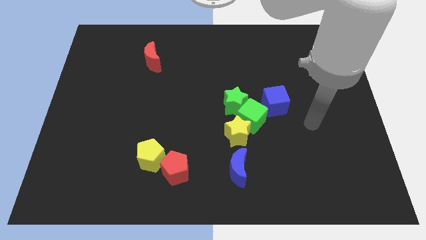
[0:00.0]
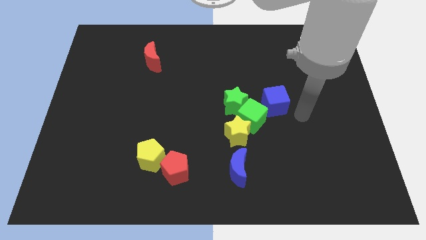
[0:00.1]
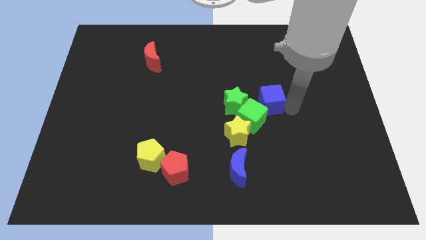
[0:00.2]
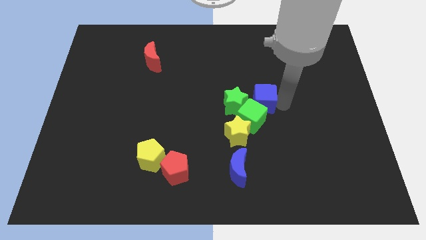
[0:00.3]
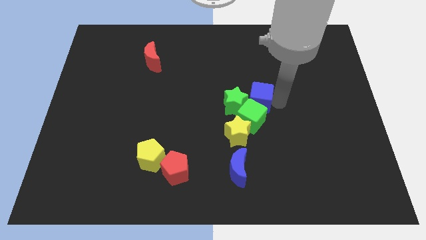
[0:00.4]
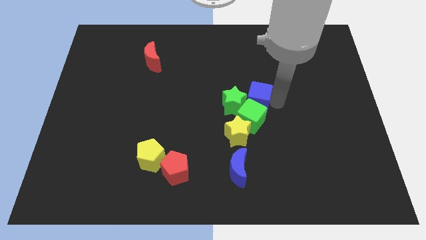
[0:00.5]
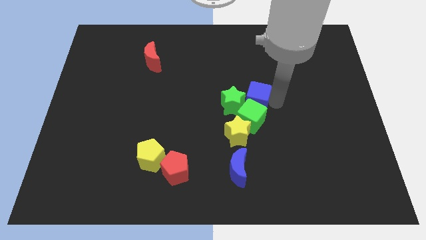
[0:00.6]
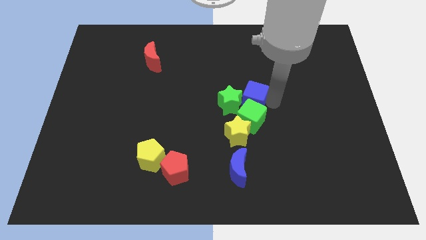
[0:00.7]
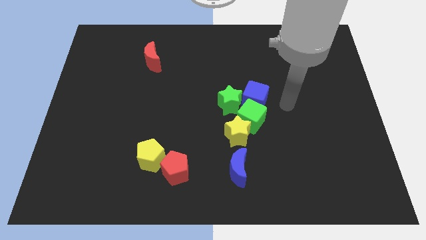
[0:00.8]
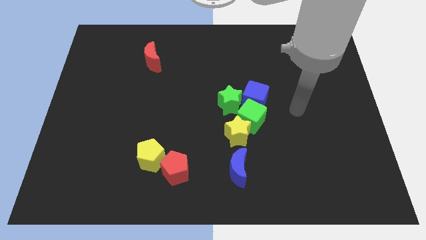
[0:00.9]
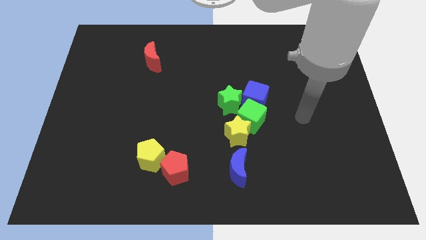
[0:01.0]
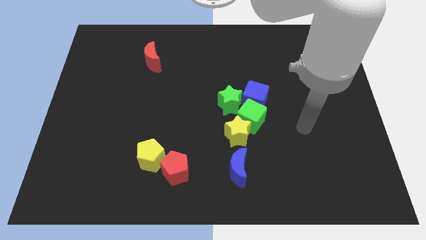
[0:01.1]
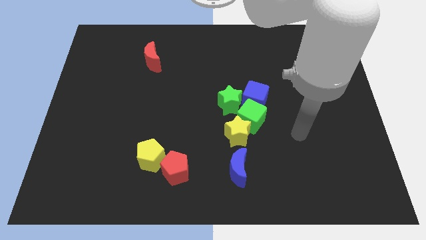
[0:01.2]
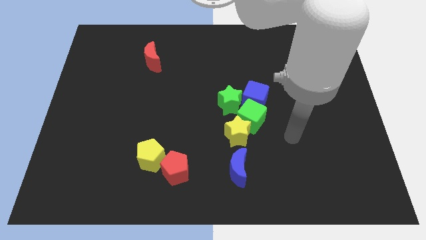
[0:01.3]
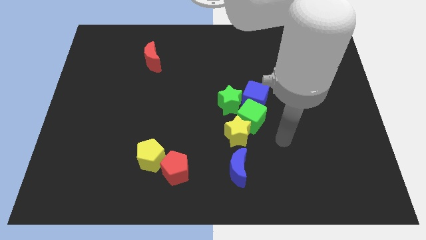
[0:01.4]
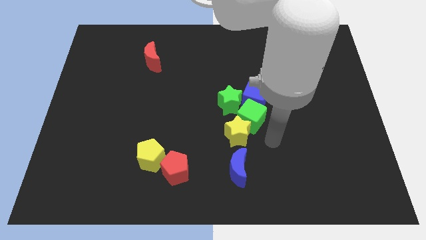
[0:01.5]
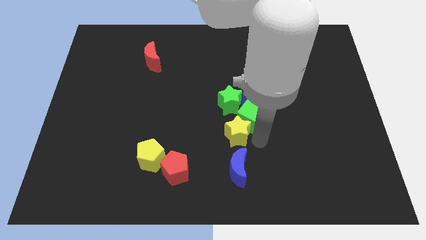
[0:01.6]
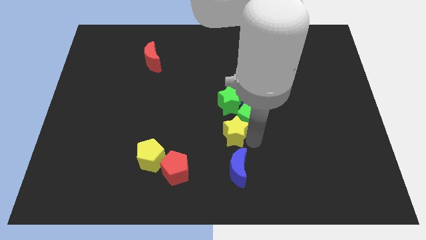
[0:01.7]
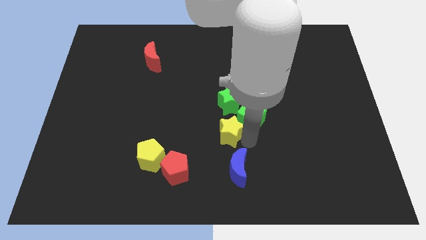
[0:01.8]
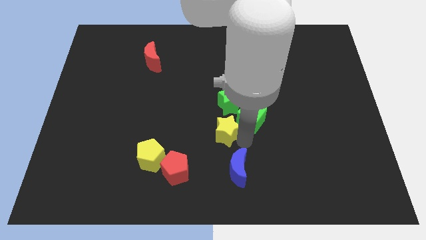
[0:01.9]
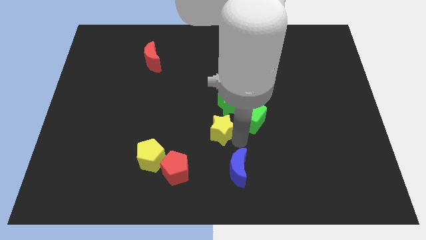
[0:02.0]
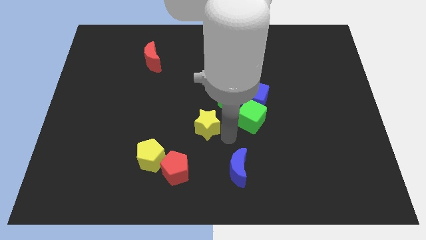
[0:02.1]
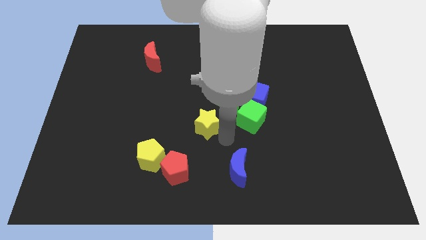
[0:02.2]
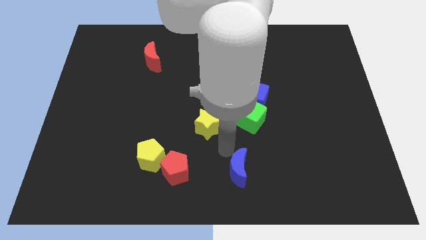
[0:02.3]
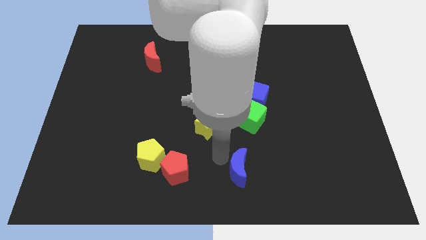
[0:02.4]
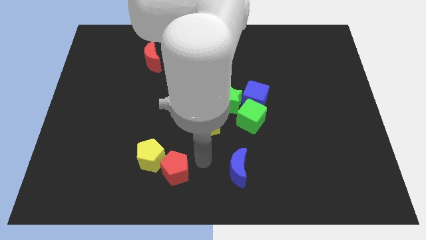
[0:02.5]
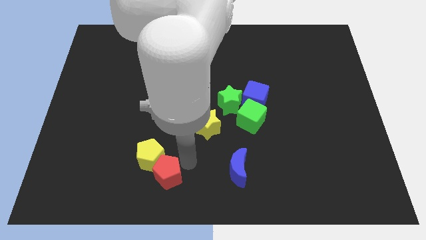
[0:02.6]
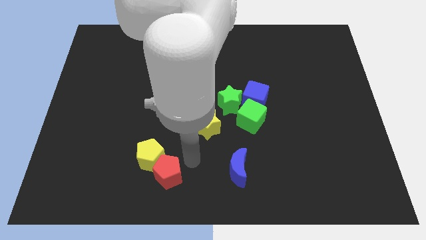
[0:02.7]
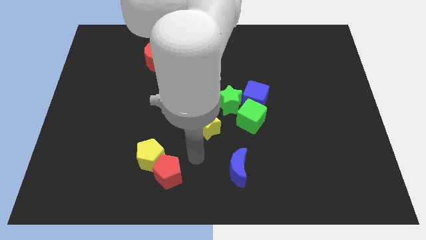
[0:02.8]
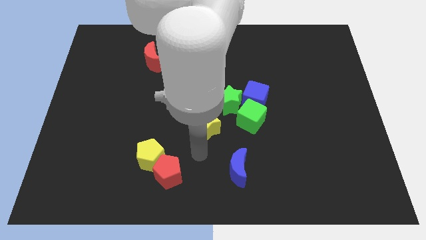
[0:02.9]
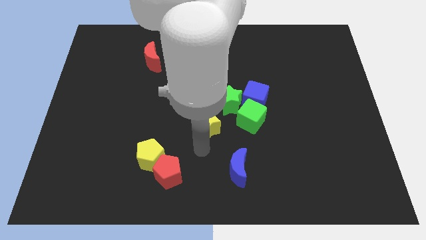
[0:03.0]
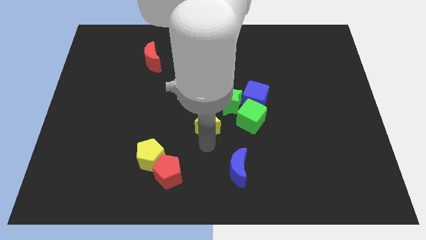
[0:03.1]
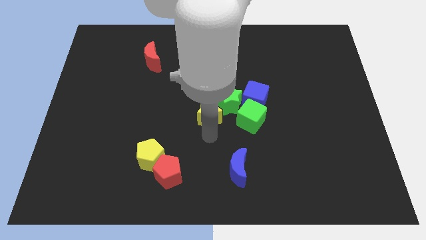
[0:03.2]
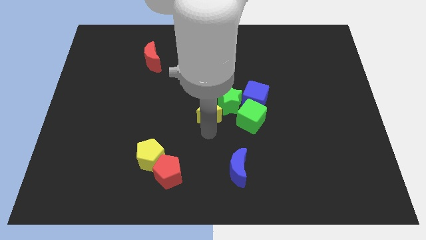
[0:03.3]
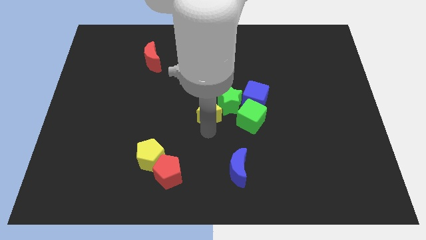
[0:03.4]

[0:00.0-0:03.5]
move the yellow star to the center of the board

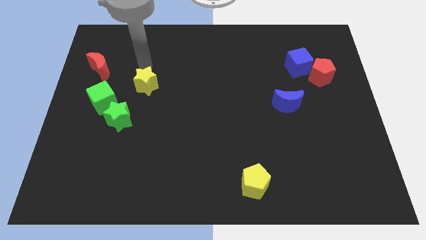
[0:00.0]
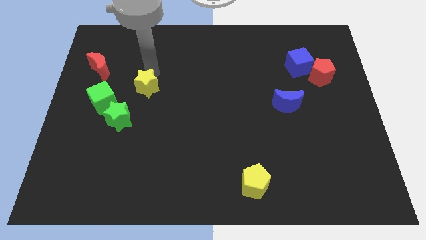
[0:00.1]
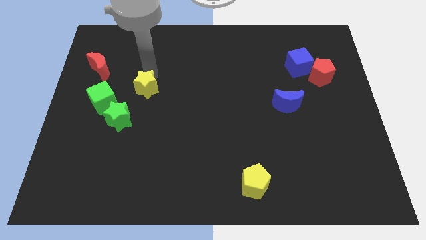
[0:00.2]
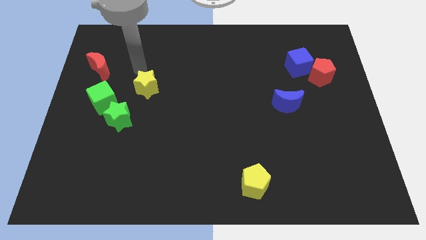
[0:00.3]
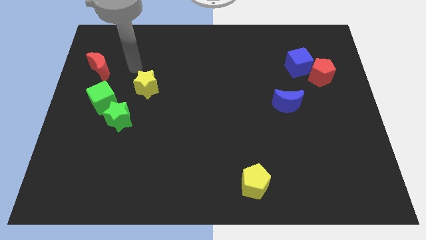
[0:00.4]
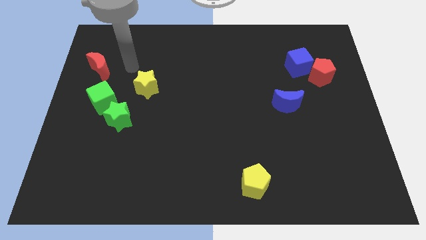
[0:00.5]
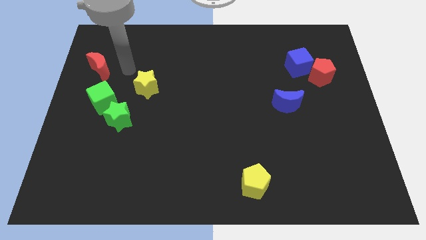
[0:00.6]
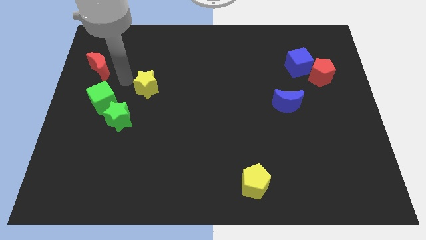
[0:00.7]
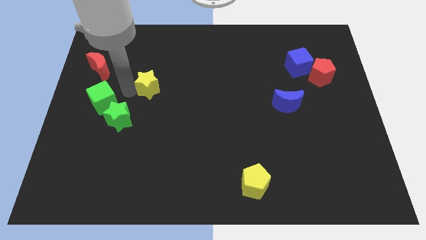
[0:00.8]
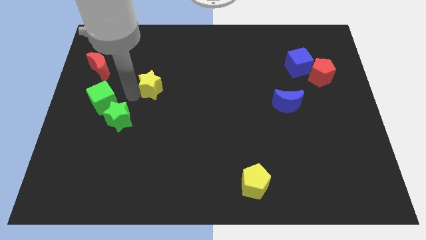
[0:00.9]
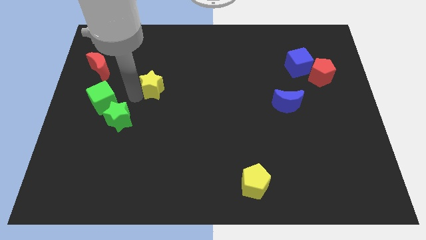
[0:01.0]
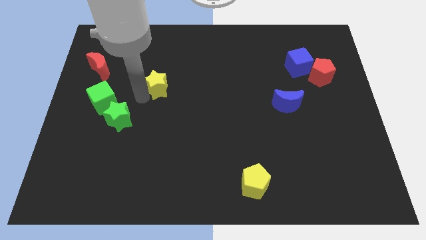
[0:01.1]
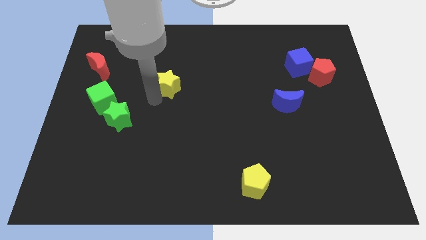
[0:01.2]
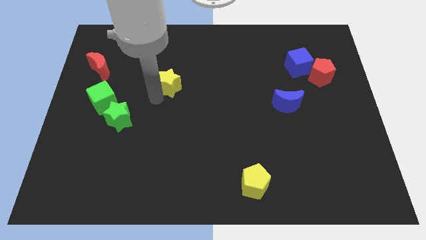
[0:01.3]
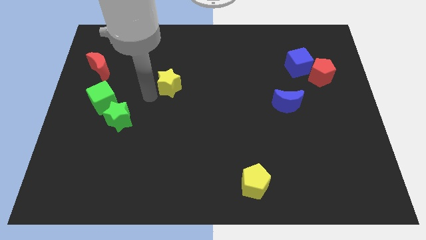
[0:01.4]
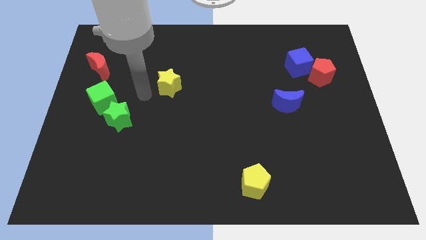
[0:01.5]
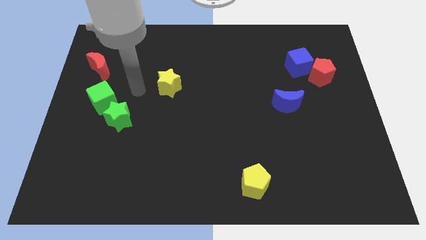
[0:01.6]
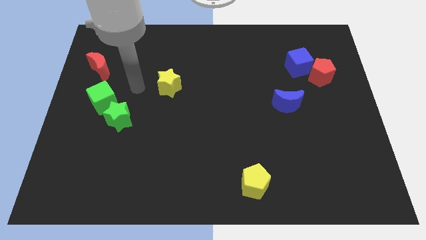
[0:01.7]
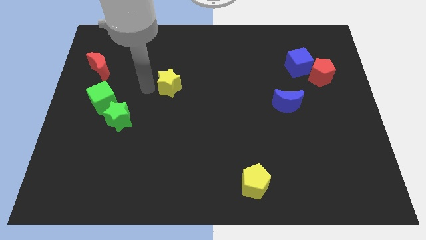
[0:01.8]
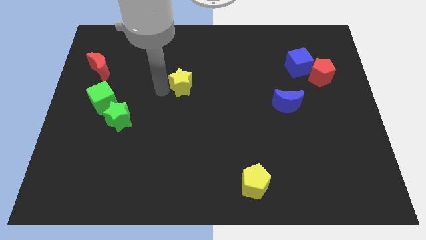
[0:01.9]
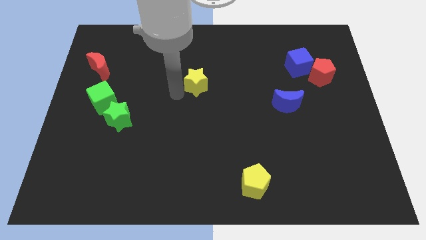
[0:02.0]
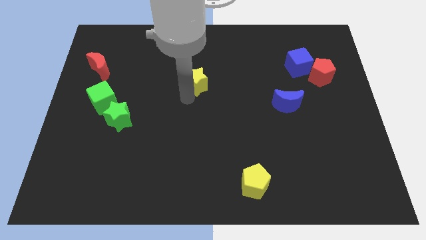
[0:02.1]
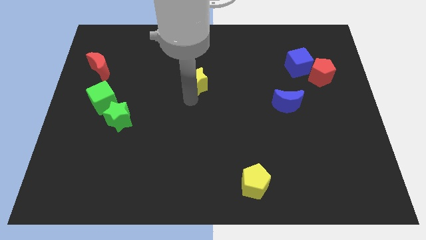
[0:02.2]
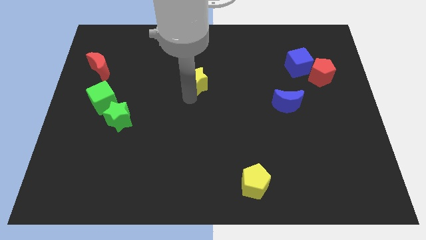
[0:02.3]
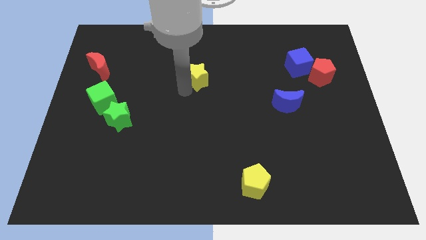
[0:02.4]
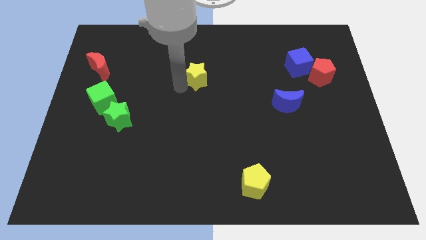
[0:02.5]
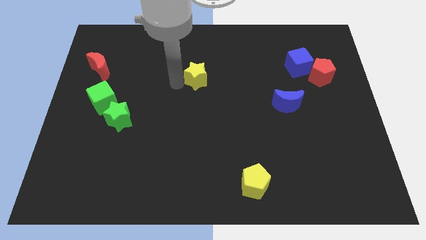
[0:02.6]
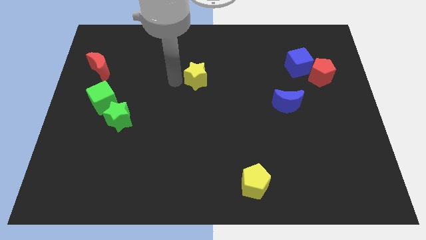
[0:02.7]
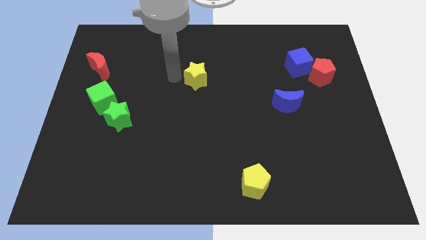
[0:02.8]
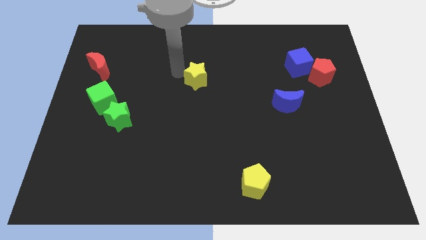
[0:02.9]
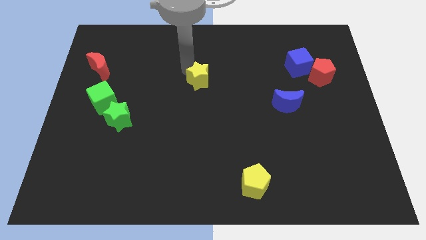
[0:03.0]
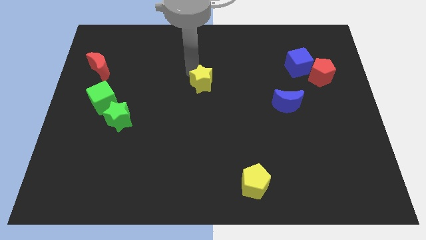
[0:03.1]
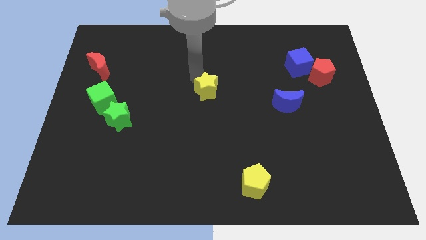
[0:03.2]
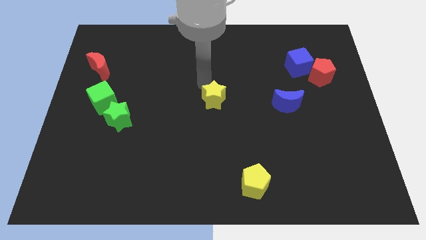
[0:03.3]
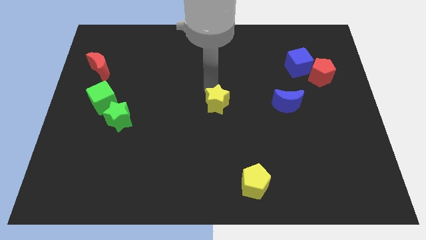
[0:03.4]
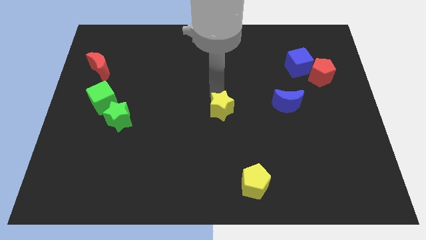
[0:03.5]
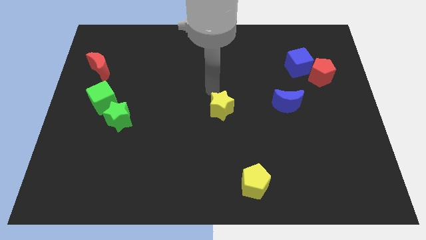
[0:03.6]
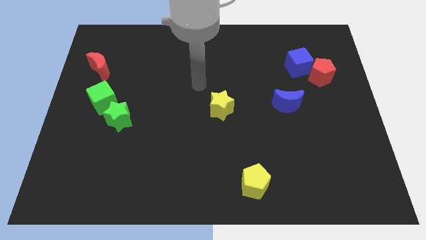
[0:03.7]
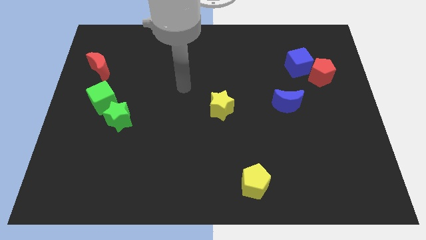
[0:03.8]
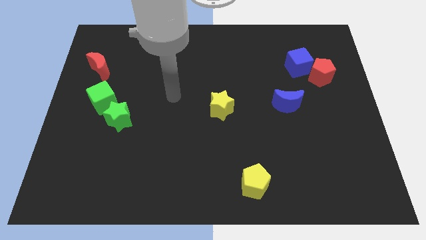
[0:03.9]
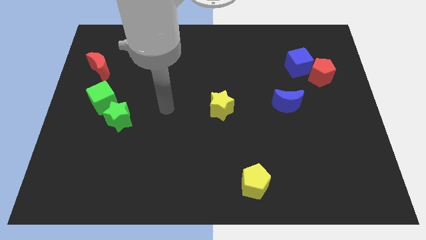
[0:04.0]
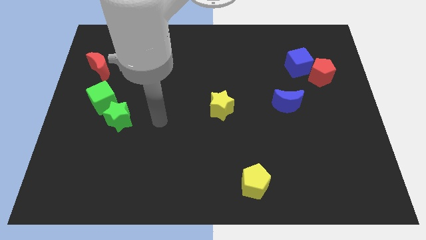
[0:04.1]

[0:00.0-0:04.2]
move the yellow star to the left of the blue crescent

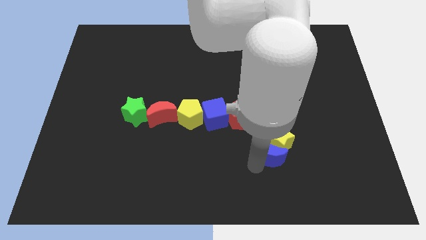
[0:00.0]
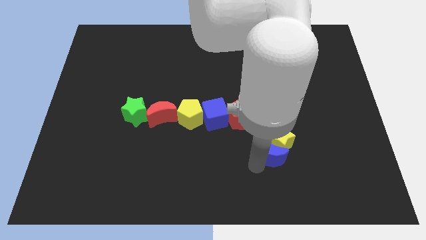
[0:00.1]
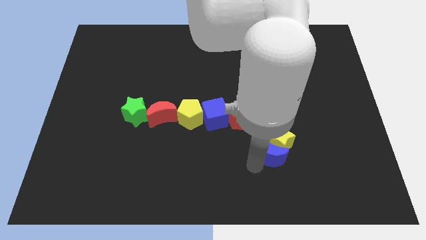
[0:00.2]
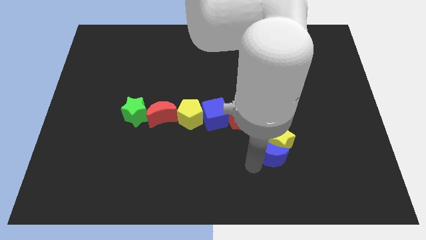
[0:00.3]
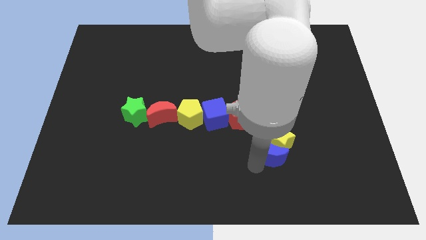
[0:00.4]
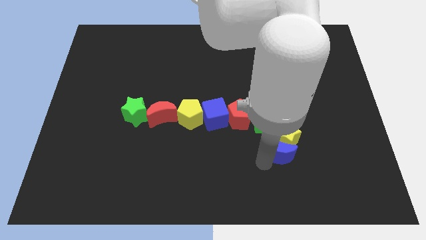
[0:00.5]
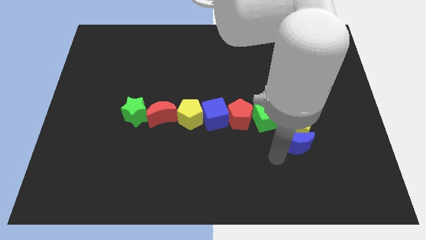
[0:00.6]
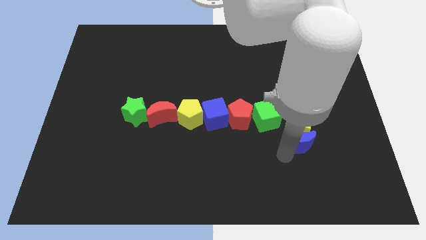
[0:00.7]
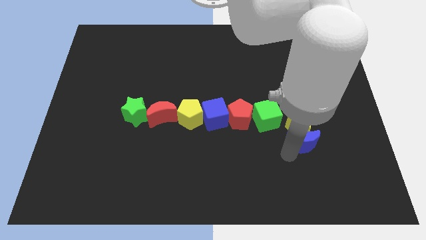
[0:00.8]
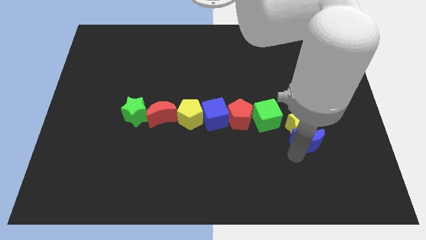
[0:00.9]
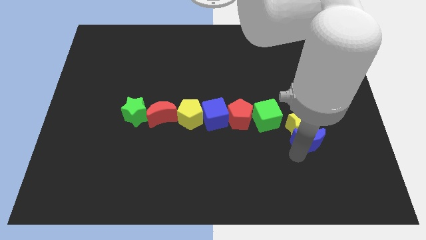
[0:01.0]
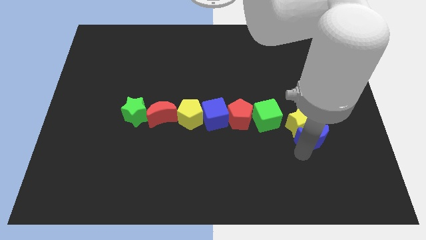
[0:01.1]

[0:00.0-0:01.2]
place the blue crescent below the yellow star
